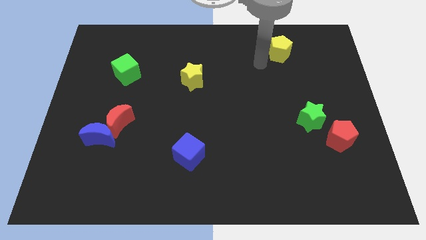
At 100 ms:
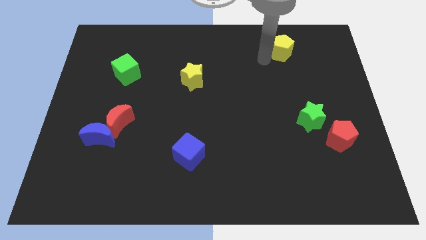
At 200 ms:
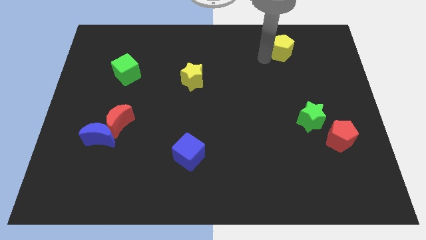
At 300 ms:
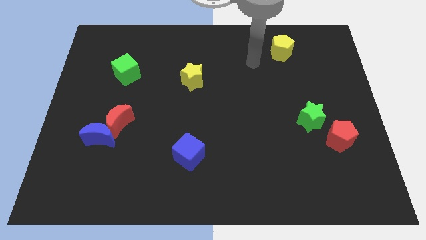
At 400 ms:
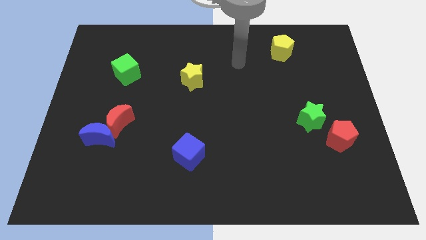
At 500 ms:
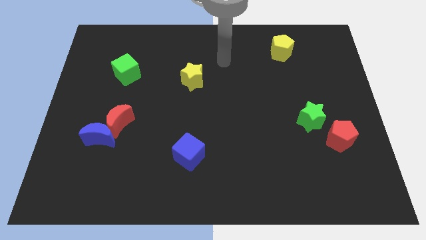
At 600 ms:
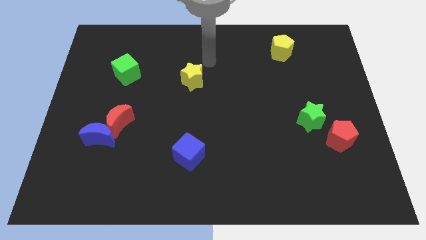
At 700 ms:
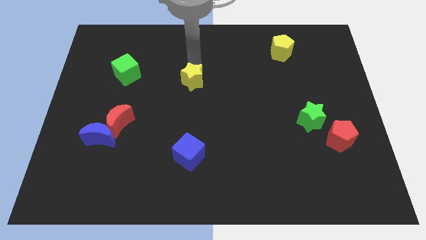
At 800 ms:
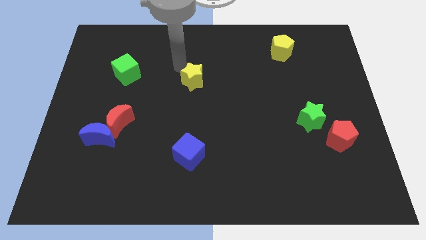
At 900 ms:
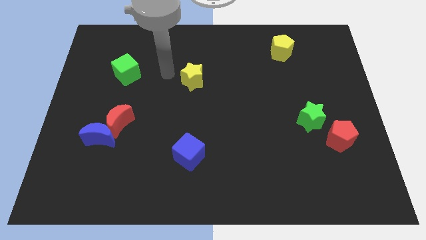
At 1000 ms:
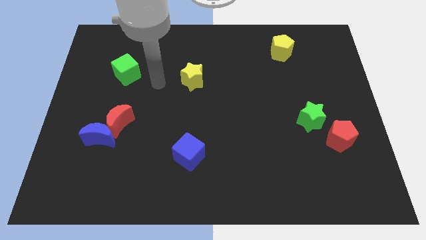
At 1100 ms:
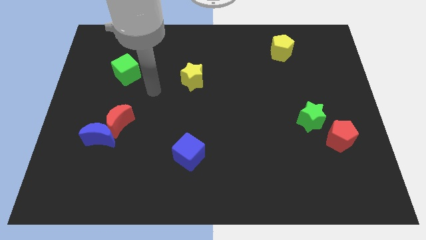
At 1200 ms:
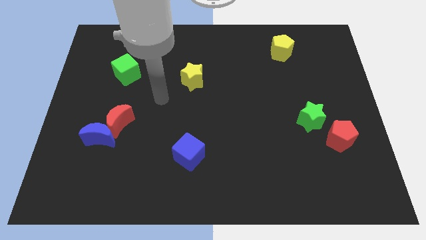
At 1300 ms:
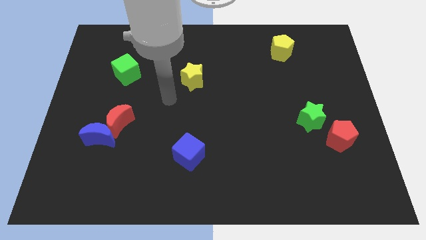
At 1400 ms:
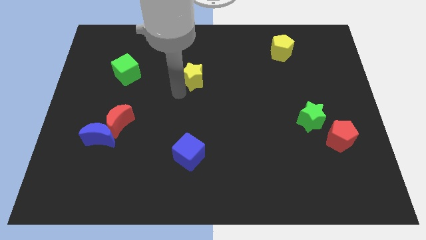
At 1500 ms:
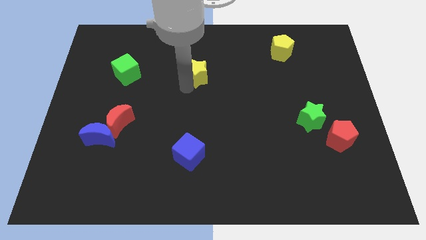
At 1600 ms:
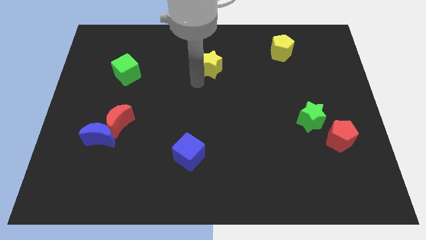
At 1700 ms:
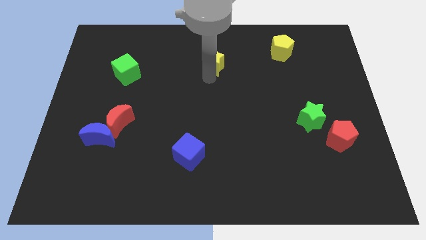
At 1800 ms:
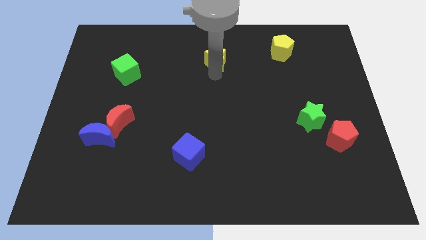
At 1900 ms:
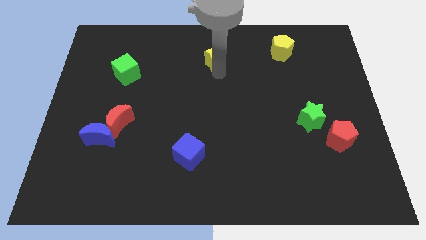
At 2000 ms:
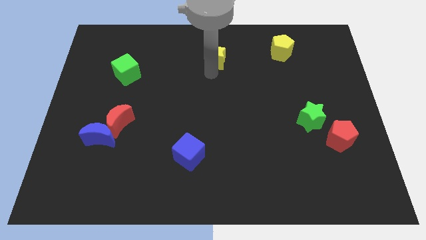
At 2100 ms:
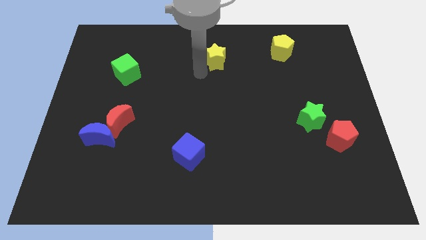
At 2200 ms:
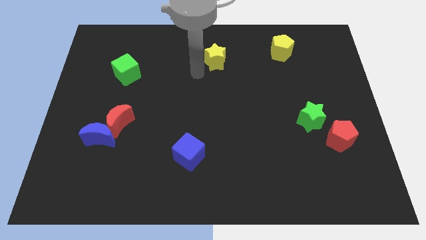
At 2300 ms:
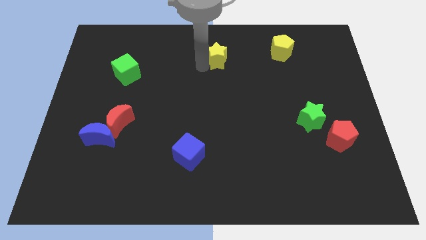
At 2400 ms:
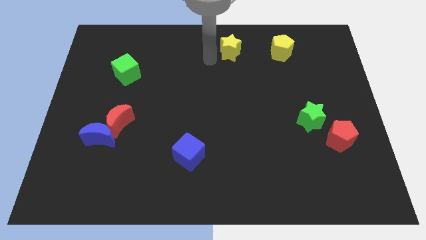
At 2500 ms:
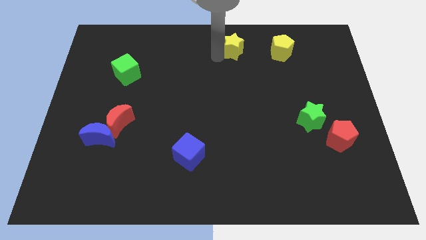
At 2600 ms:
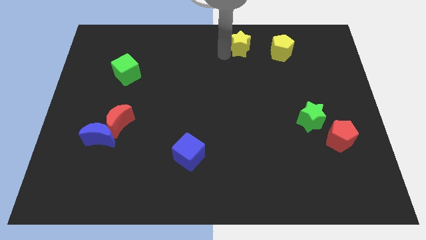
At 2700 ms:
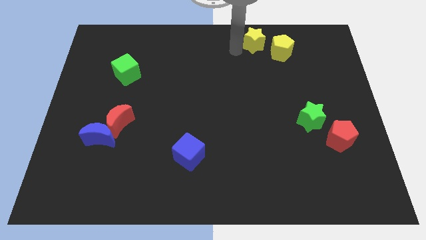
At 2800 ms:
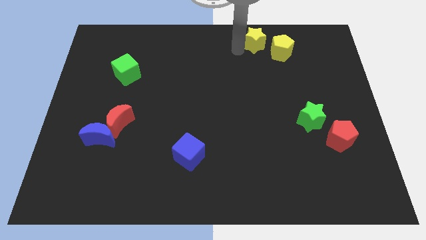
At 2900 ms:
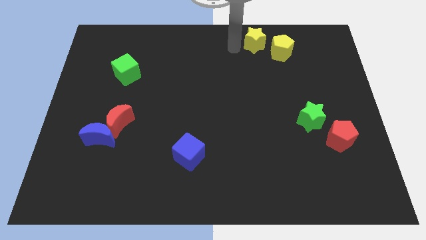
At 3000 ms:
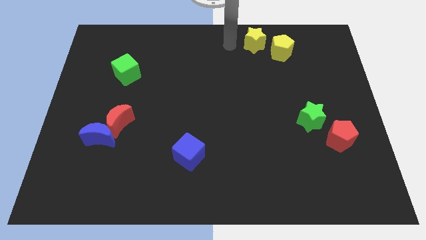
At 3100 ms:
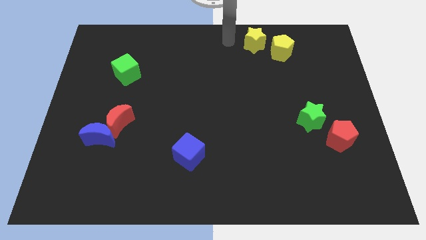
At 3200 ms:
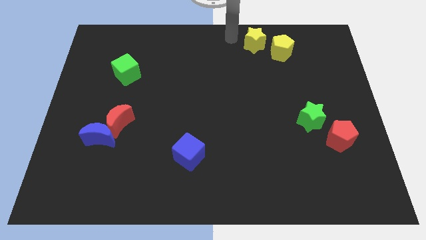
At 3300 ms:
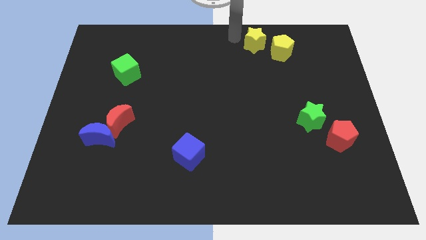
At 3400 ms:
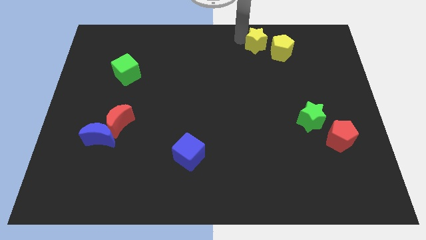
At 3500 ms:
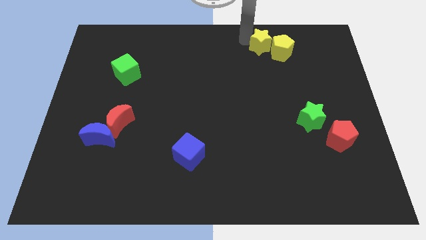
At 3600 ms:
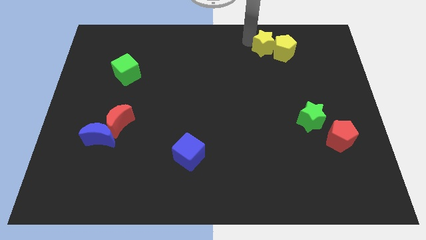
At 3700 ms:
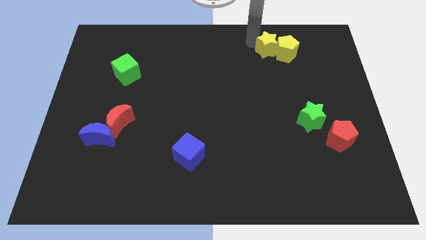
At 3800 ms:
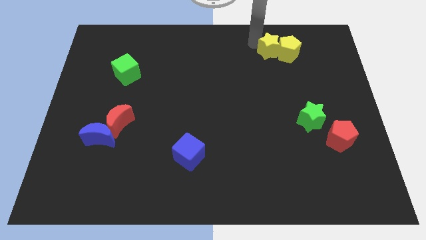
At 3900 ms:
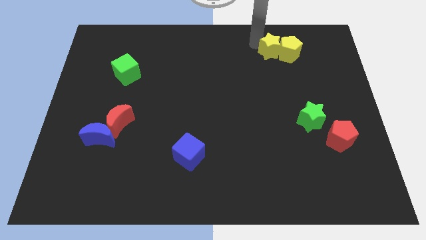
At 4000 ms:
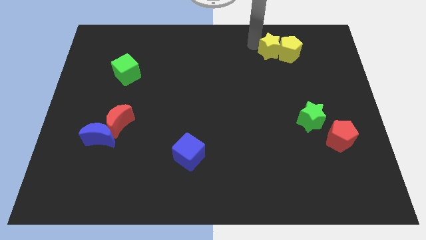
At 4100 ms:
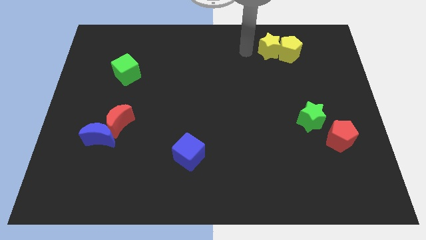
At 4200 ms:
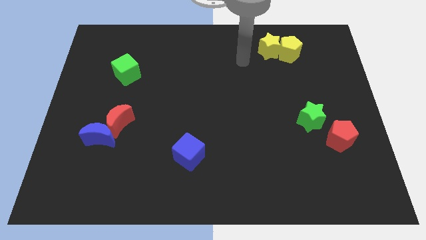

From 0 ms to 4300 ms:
group up the yellow blocks at the top side of the board

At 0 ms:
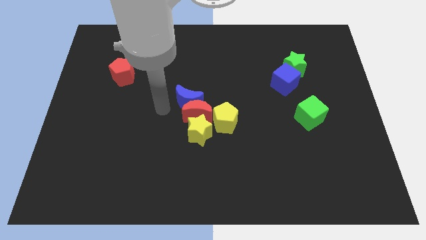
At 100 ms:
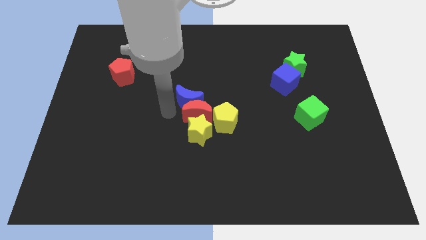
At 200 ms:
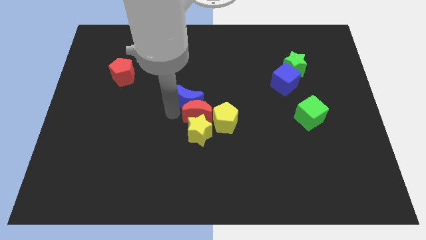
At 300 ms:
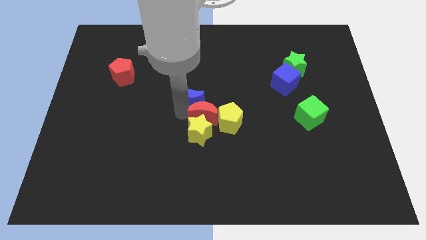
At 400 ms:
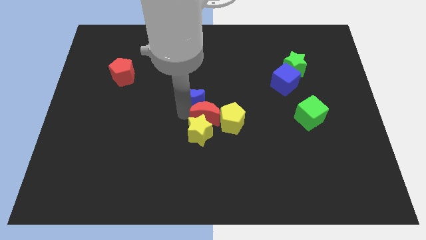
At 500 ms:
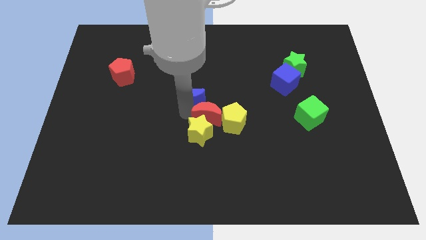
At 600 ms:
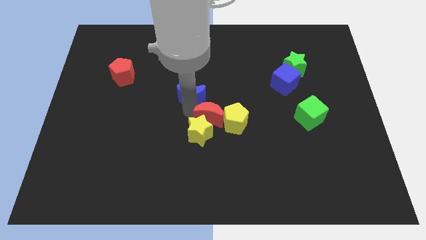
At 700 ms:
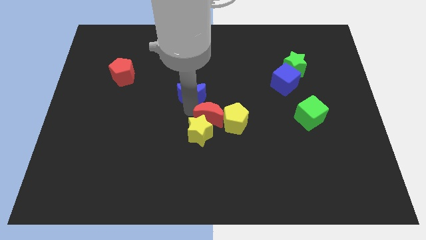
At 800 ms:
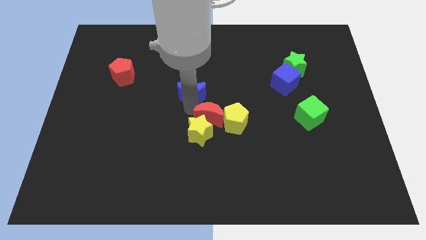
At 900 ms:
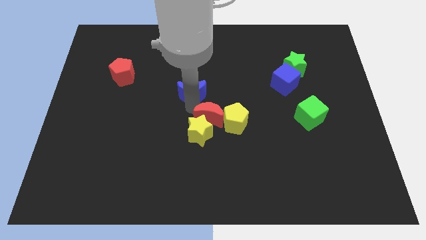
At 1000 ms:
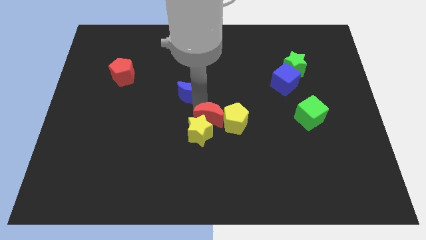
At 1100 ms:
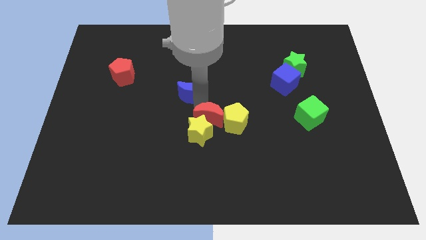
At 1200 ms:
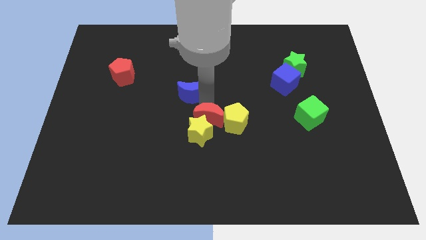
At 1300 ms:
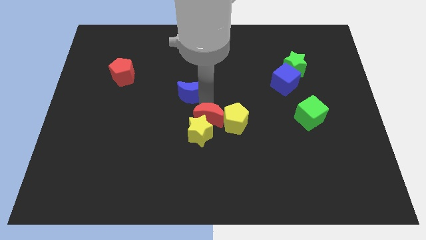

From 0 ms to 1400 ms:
separate the blue moon from the red moon

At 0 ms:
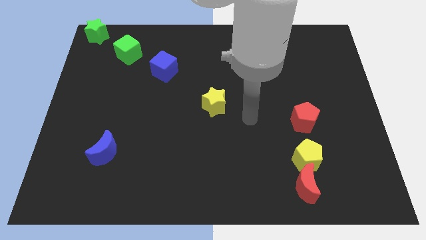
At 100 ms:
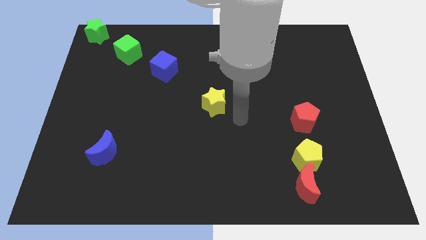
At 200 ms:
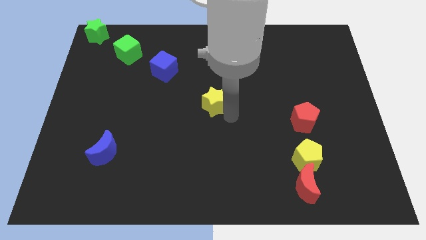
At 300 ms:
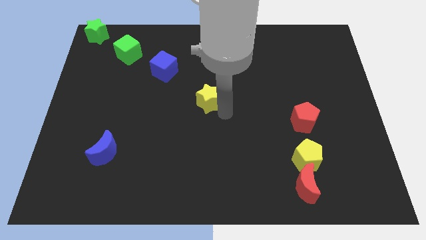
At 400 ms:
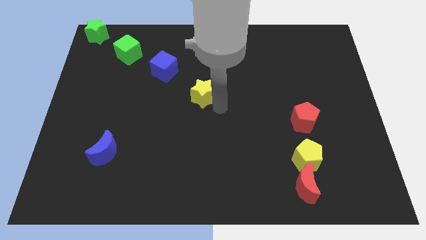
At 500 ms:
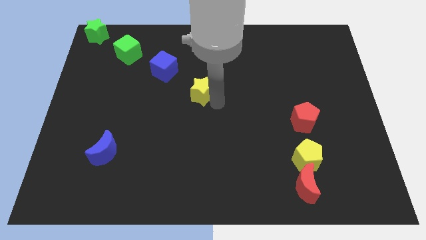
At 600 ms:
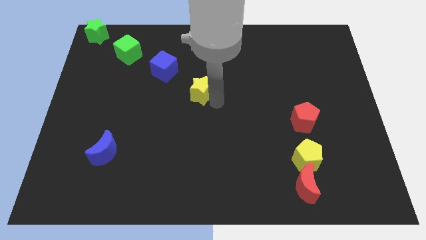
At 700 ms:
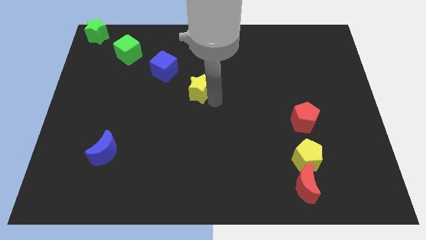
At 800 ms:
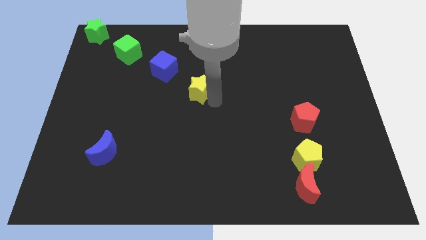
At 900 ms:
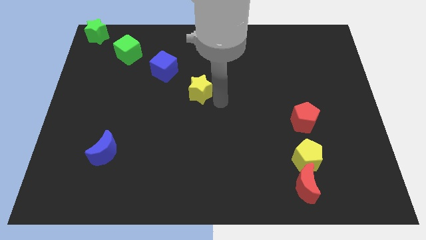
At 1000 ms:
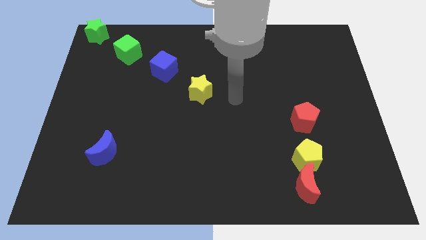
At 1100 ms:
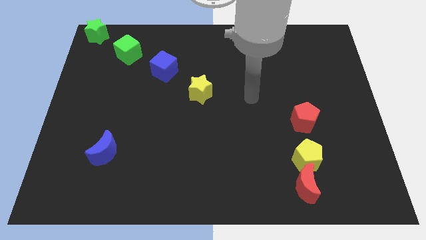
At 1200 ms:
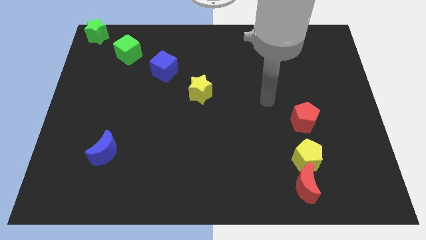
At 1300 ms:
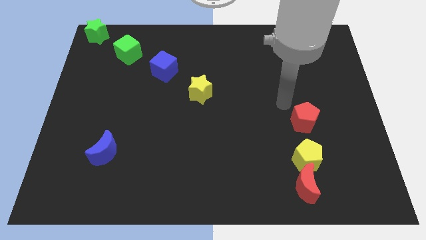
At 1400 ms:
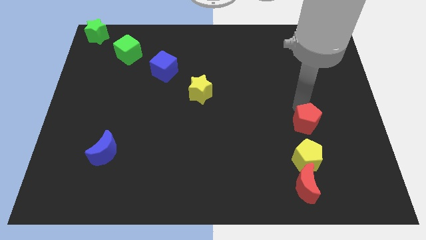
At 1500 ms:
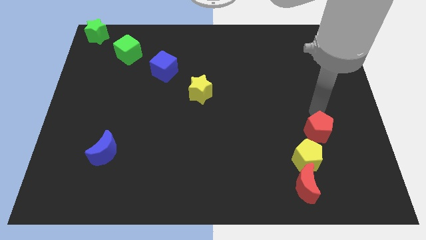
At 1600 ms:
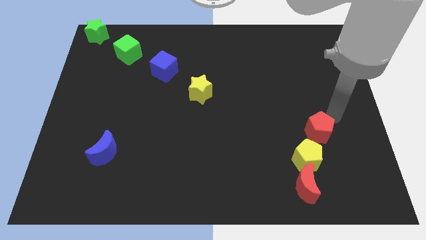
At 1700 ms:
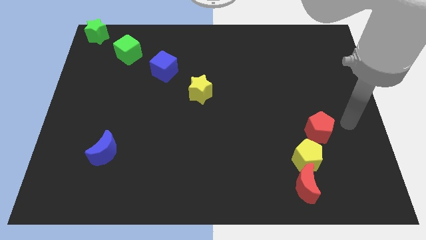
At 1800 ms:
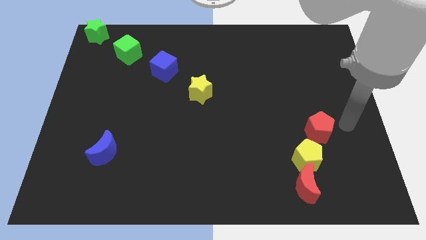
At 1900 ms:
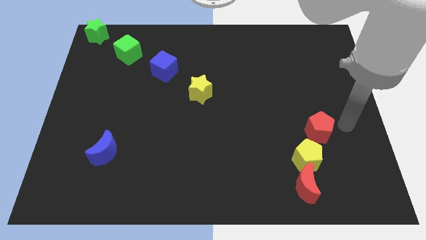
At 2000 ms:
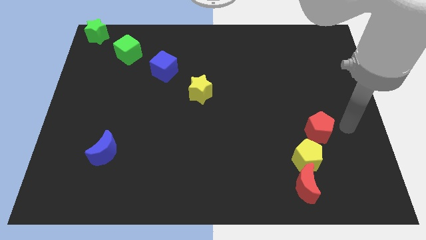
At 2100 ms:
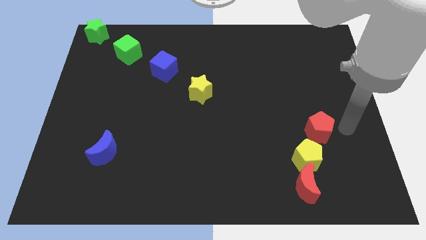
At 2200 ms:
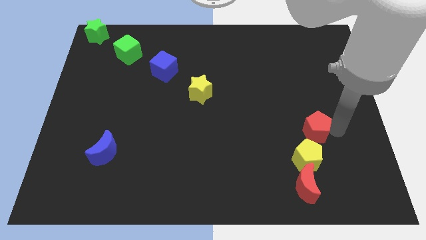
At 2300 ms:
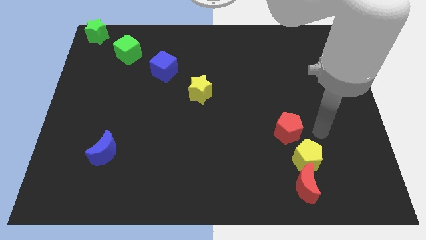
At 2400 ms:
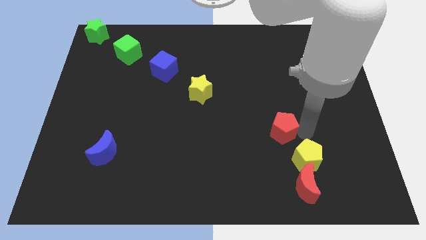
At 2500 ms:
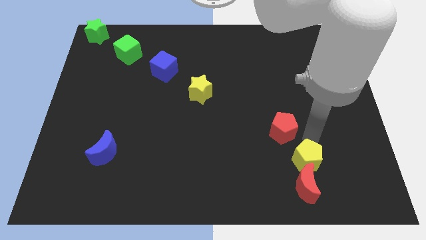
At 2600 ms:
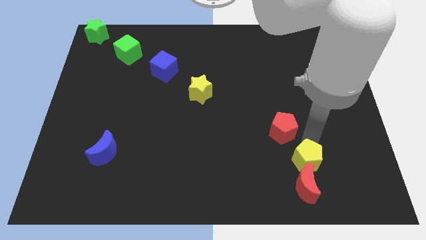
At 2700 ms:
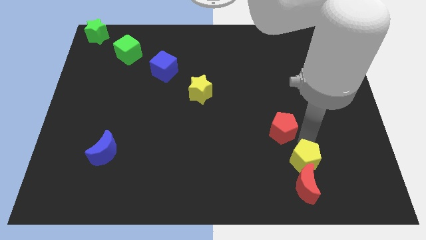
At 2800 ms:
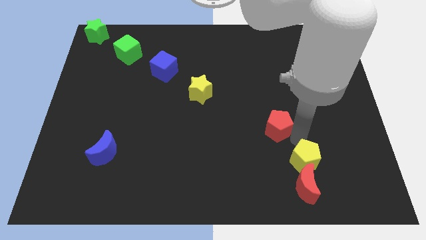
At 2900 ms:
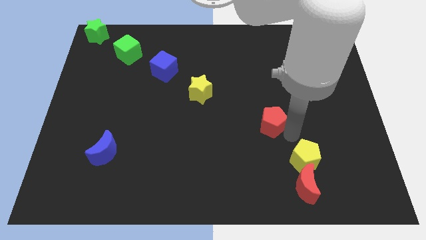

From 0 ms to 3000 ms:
move the yellow star diagonally right to the blue cube

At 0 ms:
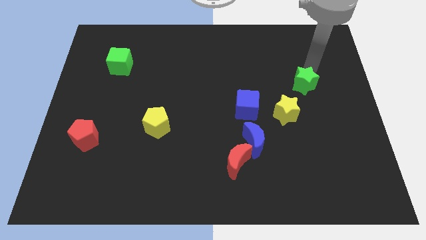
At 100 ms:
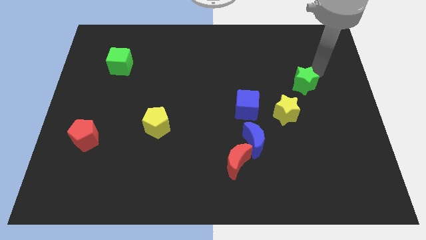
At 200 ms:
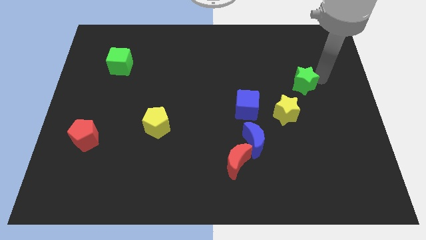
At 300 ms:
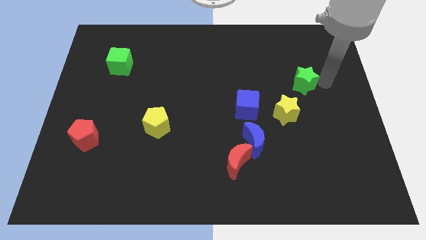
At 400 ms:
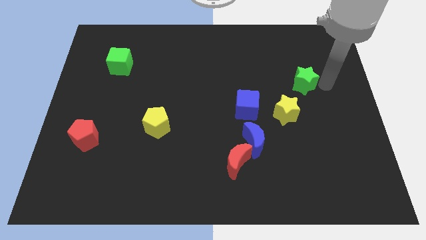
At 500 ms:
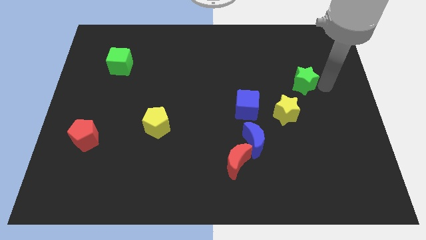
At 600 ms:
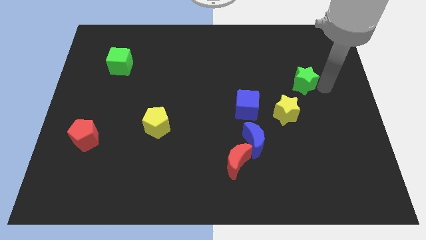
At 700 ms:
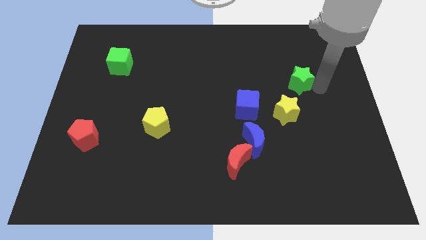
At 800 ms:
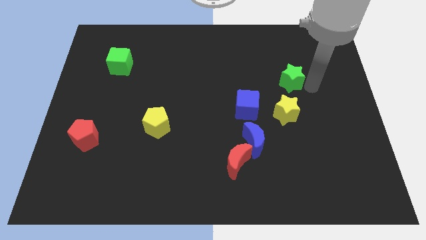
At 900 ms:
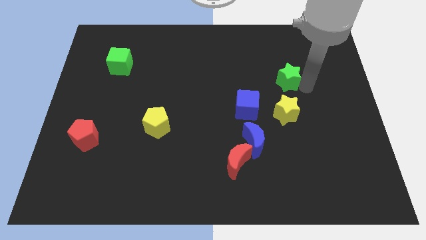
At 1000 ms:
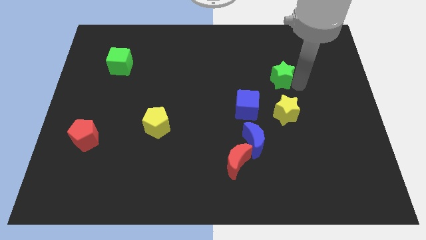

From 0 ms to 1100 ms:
slide green star slightly to the left